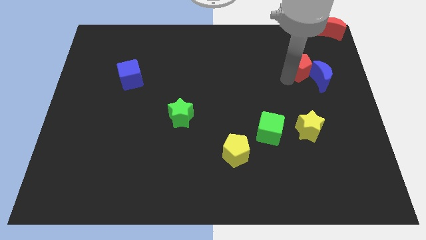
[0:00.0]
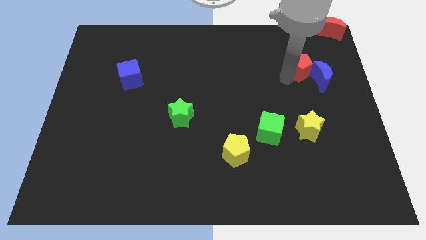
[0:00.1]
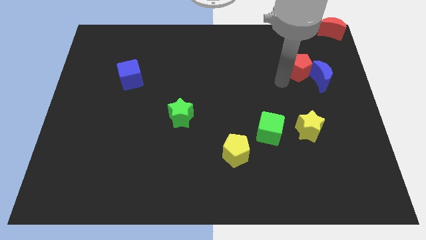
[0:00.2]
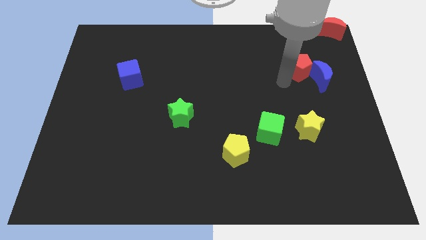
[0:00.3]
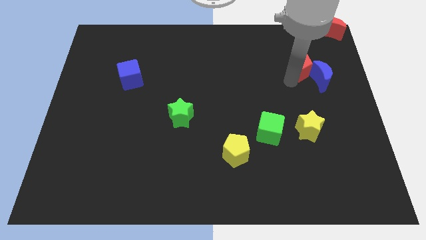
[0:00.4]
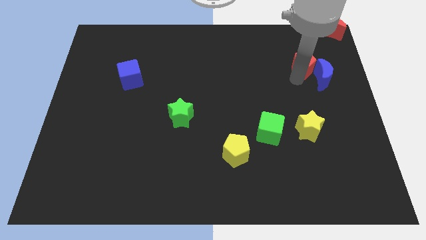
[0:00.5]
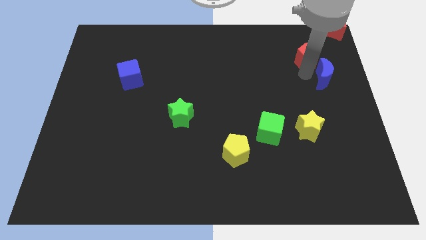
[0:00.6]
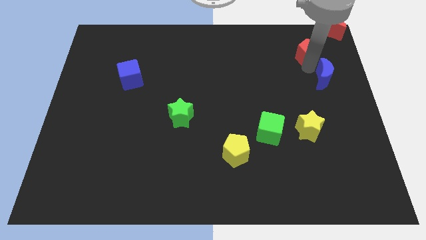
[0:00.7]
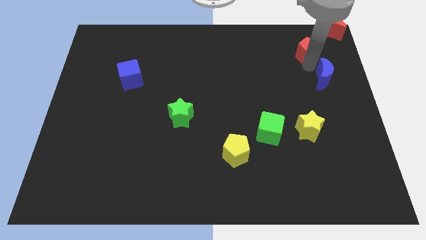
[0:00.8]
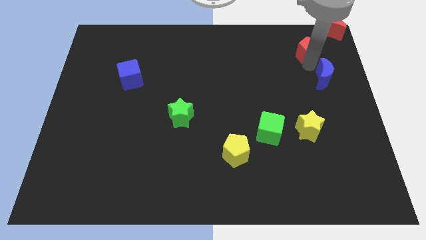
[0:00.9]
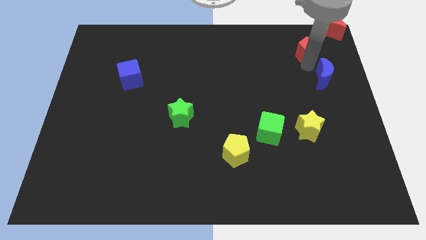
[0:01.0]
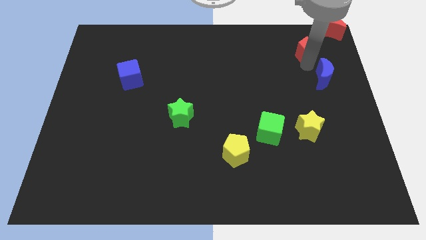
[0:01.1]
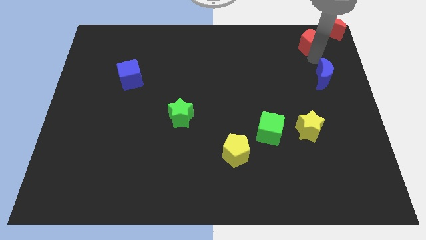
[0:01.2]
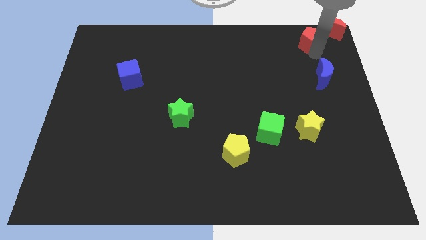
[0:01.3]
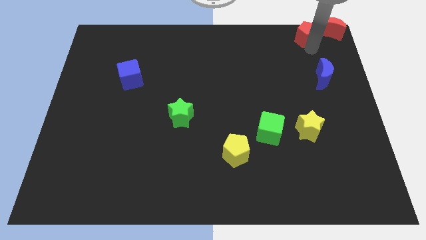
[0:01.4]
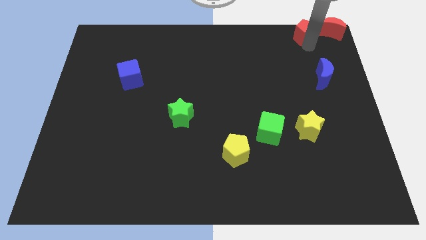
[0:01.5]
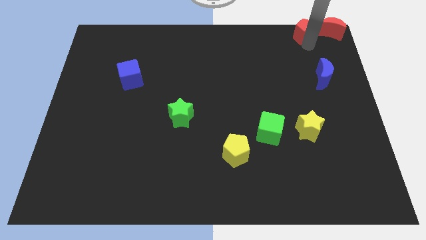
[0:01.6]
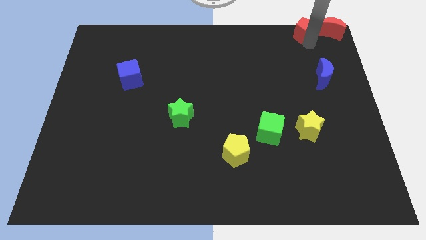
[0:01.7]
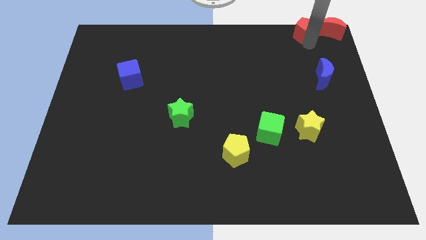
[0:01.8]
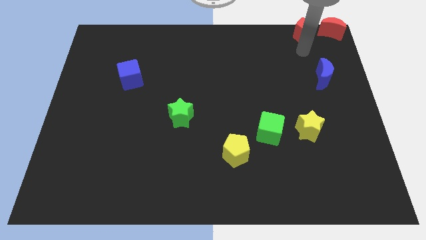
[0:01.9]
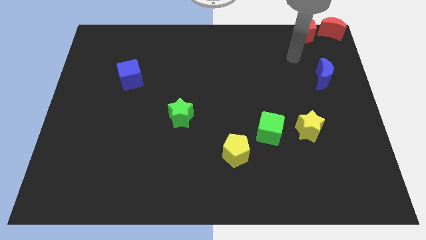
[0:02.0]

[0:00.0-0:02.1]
separate red pentagon from blue moon

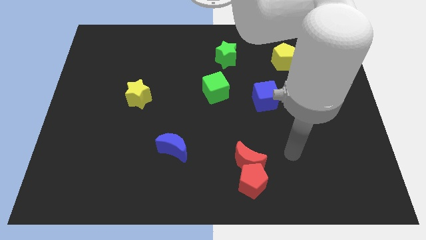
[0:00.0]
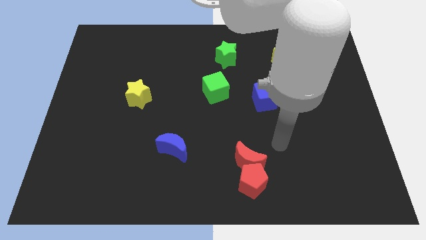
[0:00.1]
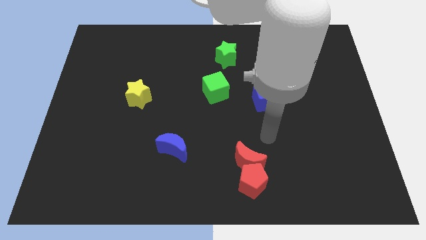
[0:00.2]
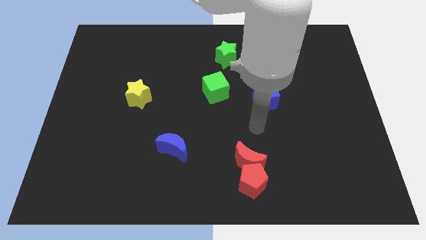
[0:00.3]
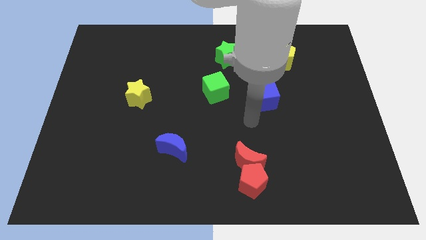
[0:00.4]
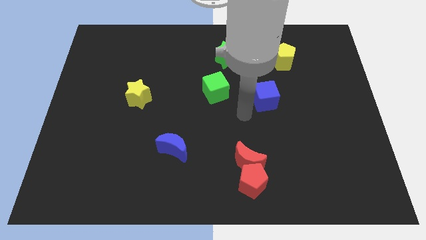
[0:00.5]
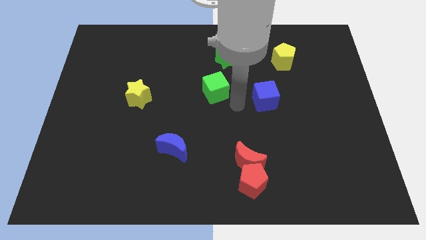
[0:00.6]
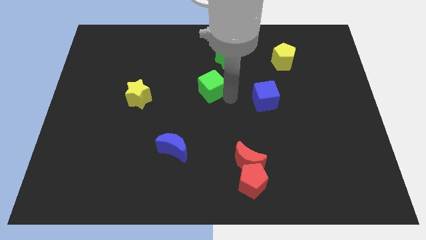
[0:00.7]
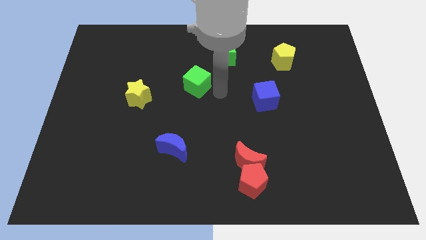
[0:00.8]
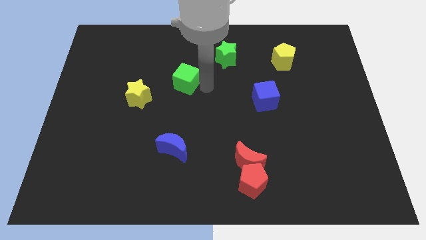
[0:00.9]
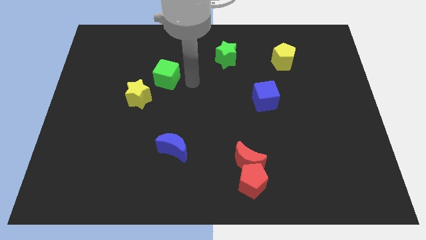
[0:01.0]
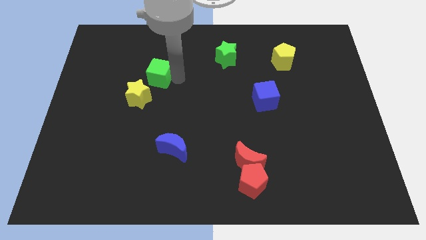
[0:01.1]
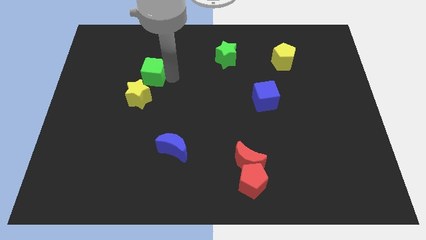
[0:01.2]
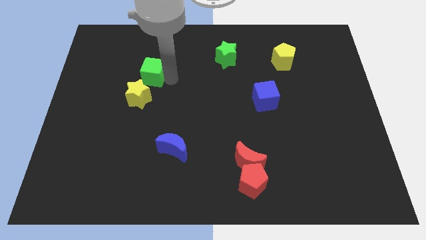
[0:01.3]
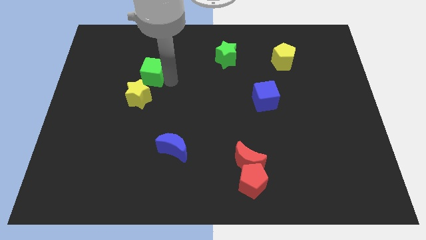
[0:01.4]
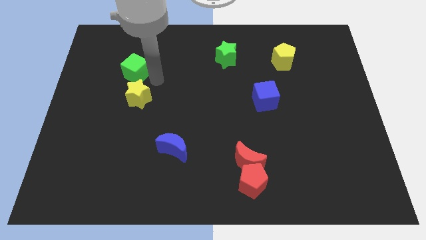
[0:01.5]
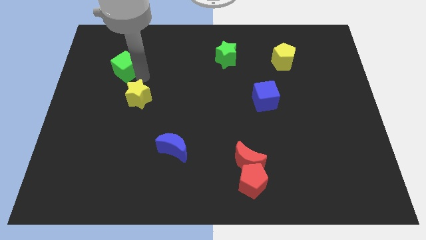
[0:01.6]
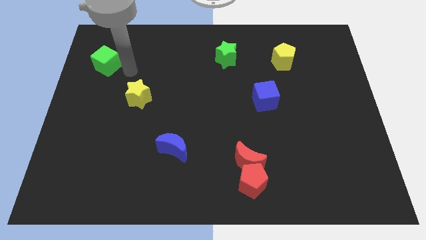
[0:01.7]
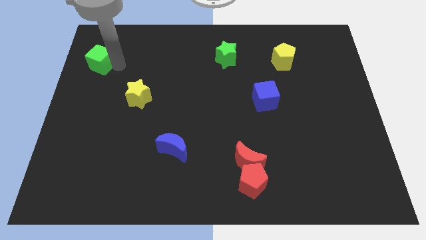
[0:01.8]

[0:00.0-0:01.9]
push the green cube to the left side

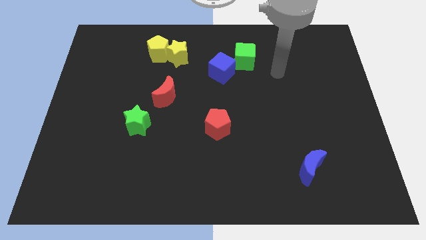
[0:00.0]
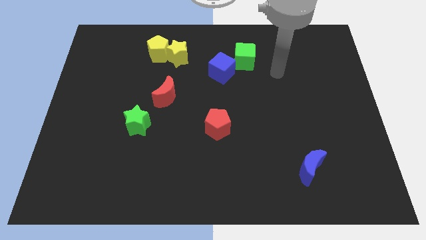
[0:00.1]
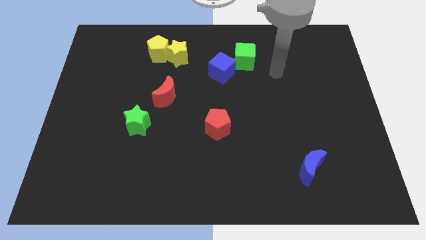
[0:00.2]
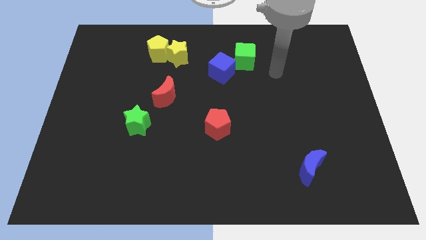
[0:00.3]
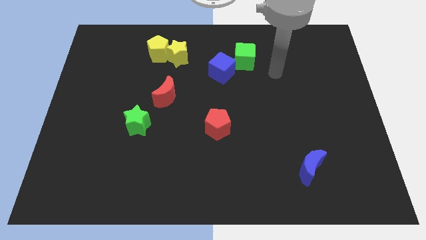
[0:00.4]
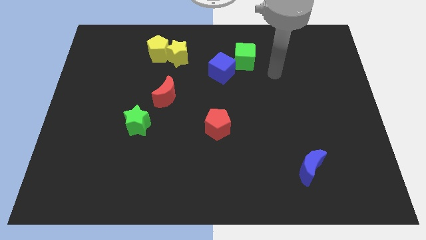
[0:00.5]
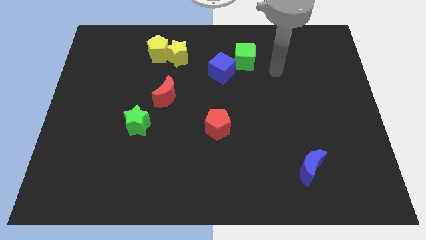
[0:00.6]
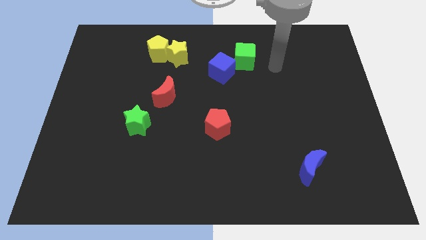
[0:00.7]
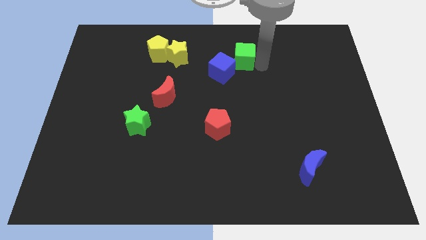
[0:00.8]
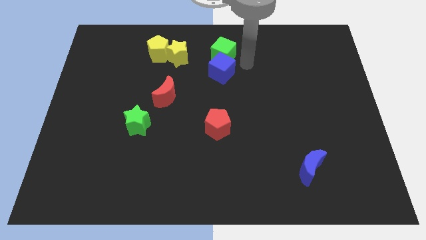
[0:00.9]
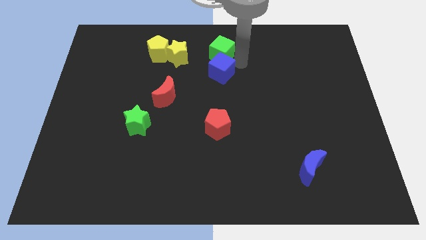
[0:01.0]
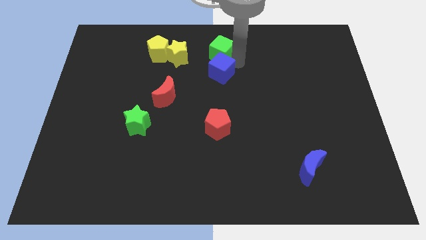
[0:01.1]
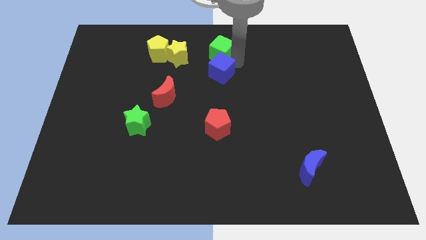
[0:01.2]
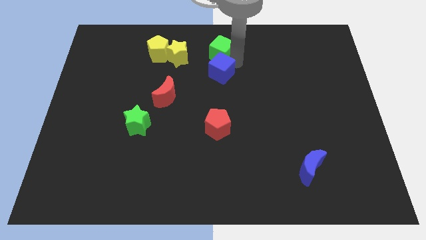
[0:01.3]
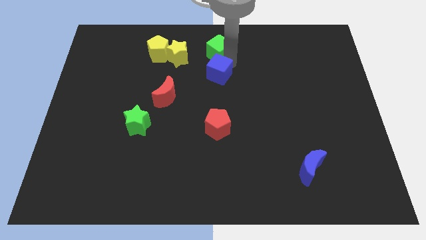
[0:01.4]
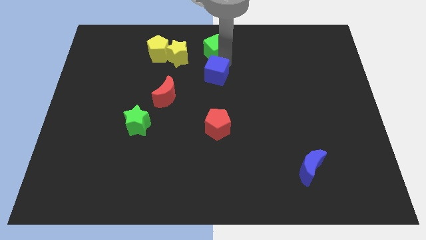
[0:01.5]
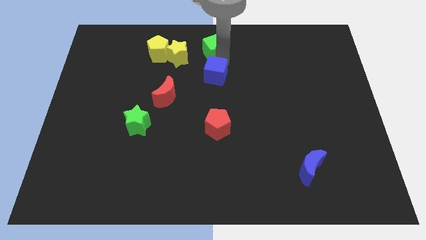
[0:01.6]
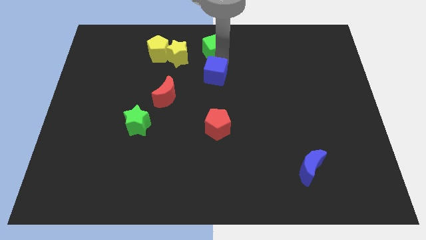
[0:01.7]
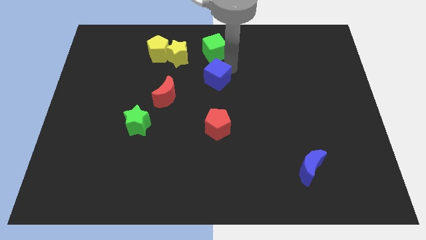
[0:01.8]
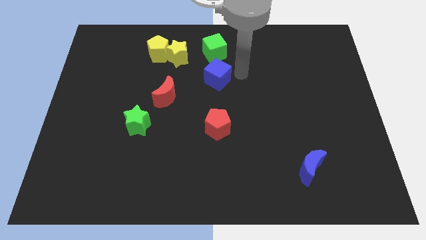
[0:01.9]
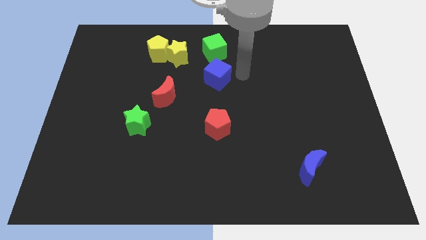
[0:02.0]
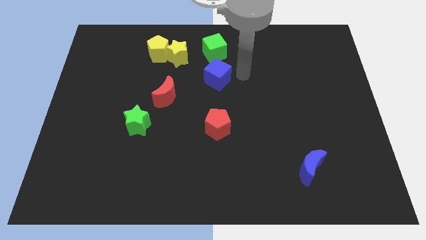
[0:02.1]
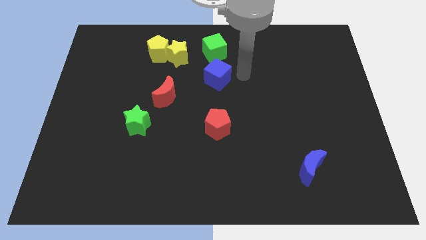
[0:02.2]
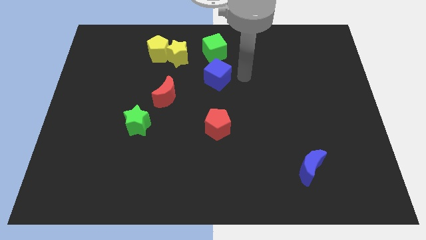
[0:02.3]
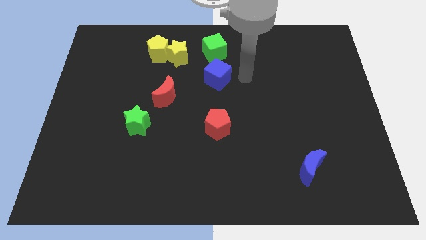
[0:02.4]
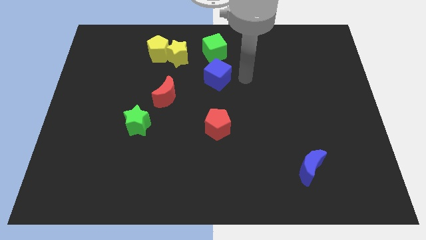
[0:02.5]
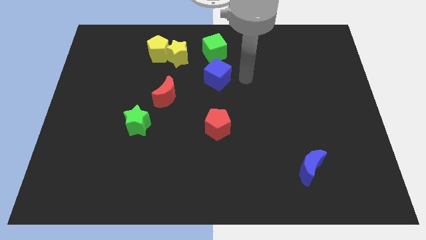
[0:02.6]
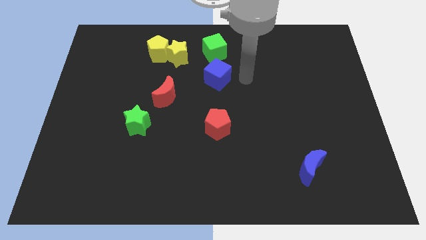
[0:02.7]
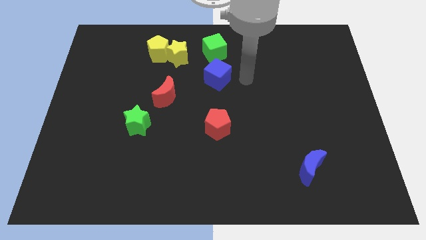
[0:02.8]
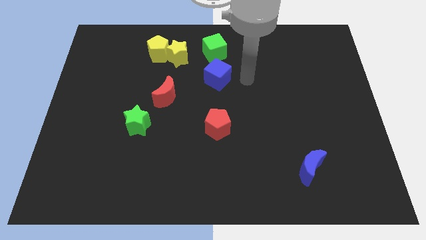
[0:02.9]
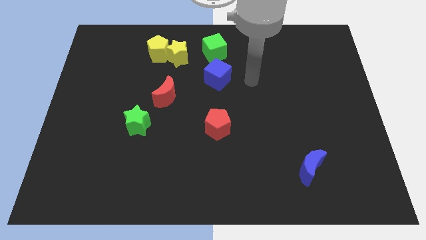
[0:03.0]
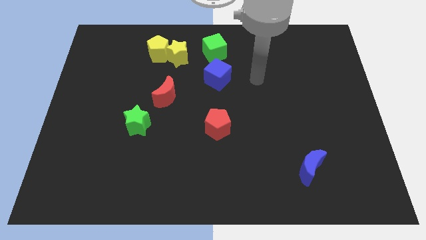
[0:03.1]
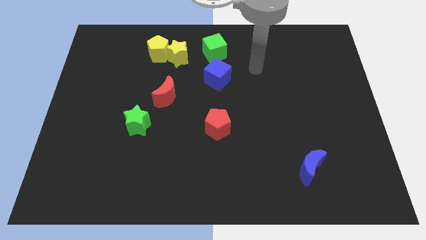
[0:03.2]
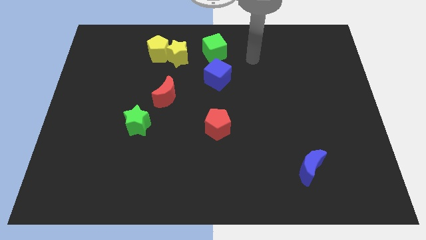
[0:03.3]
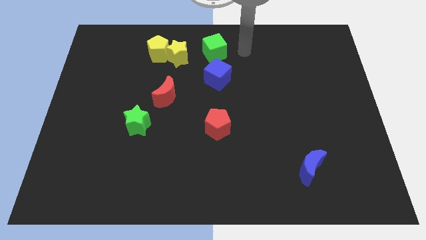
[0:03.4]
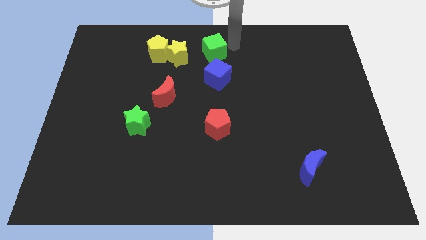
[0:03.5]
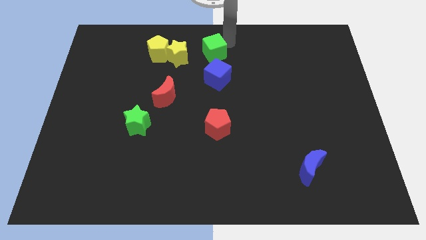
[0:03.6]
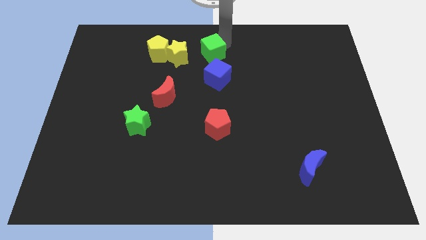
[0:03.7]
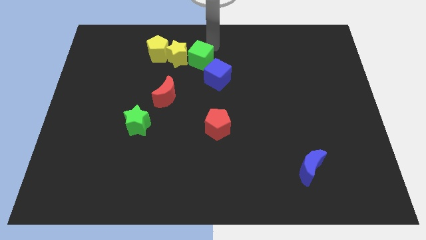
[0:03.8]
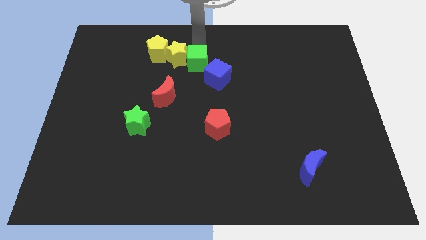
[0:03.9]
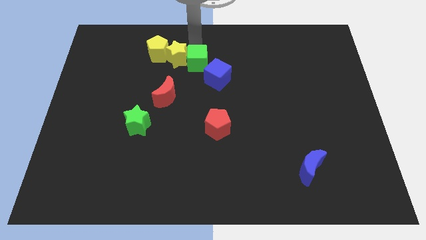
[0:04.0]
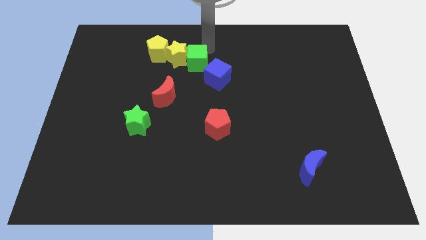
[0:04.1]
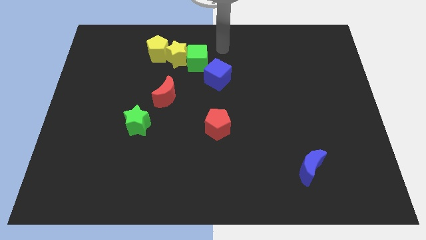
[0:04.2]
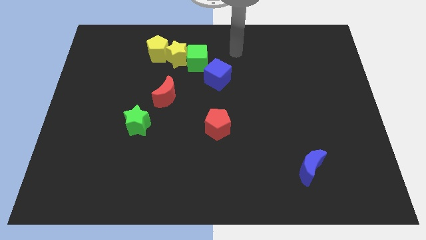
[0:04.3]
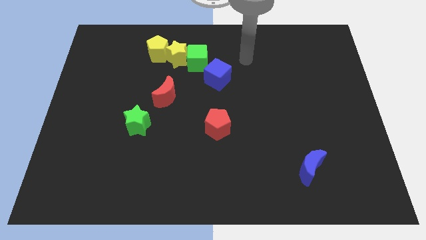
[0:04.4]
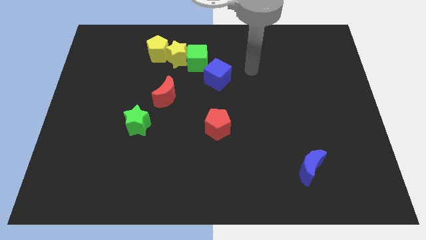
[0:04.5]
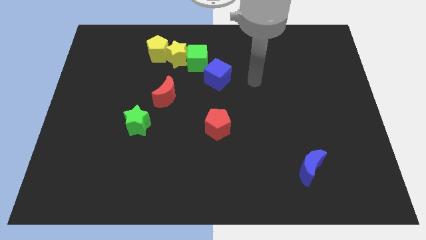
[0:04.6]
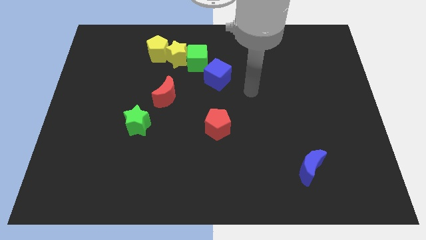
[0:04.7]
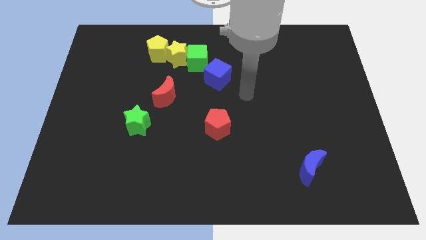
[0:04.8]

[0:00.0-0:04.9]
push the green cube into the yellow star

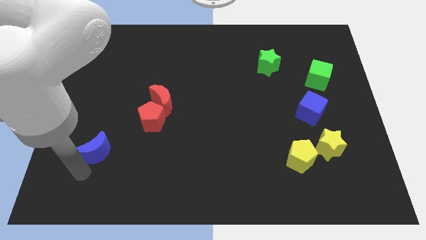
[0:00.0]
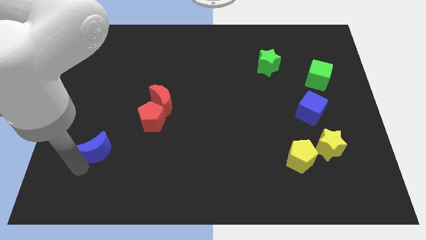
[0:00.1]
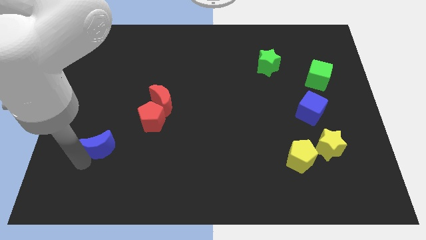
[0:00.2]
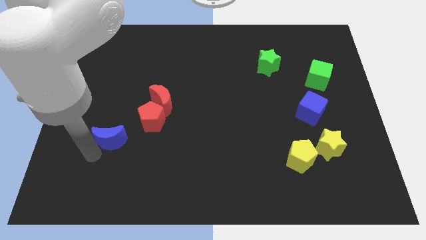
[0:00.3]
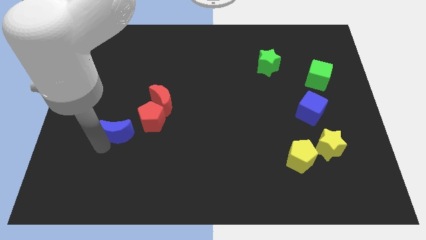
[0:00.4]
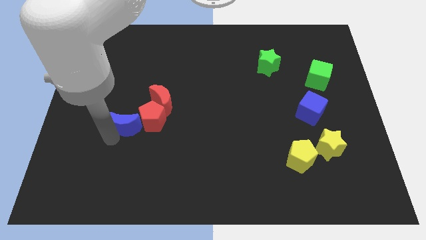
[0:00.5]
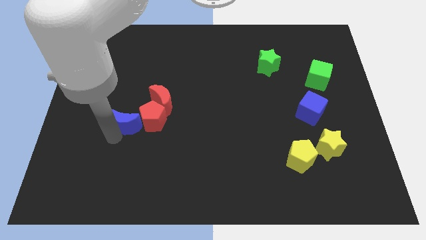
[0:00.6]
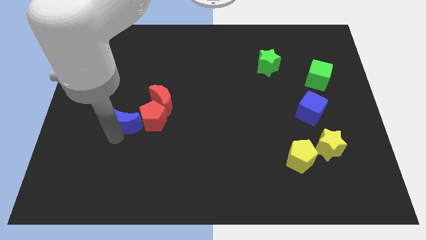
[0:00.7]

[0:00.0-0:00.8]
push blue crescent beside red pentagon
